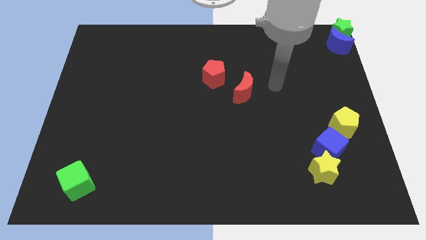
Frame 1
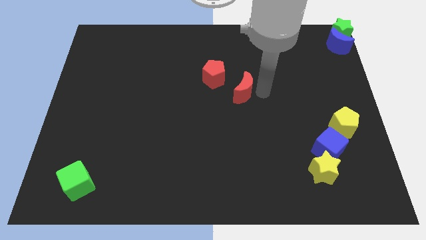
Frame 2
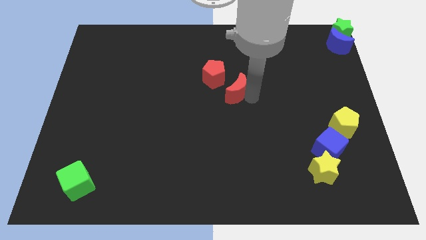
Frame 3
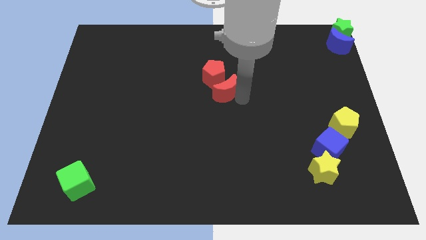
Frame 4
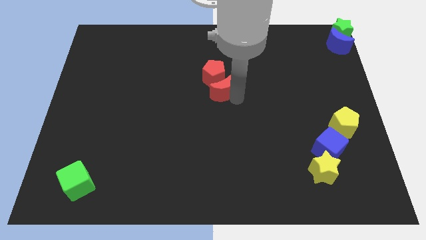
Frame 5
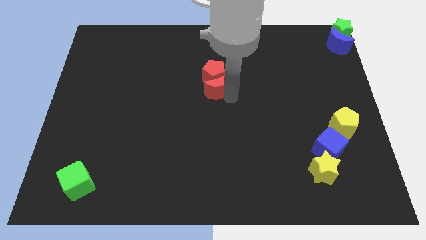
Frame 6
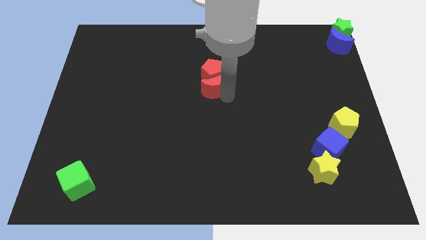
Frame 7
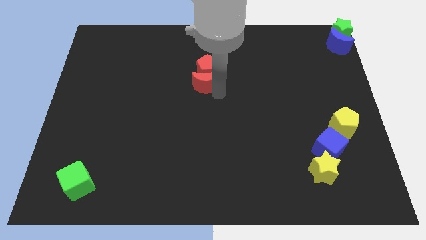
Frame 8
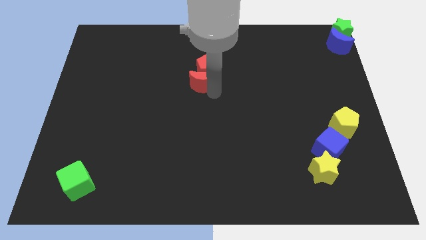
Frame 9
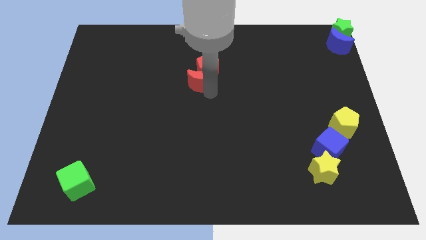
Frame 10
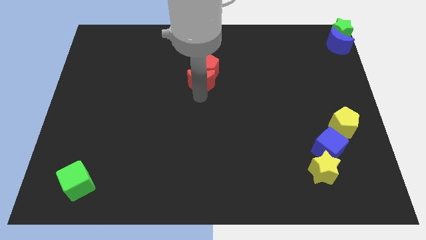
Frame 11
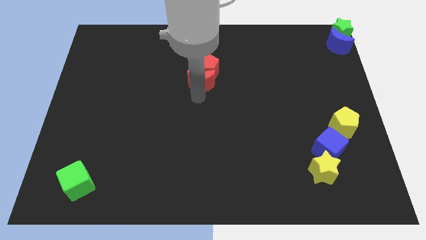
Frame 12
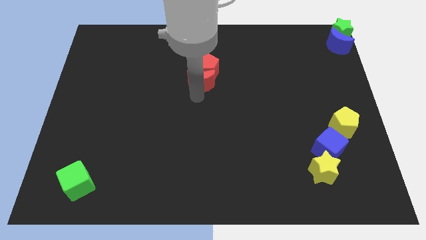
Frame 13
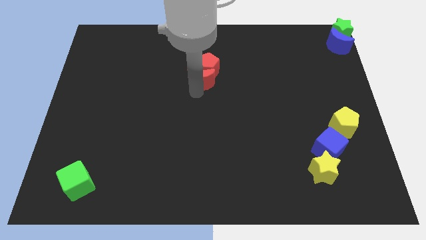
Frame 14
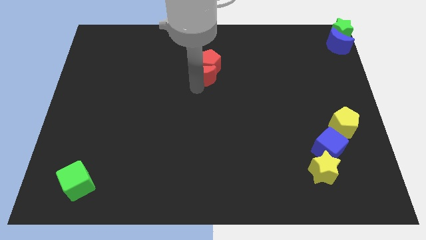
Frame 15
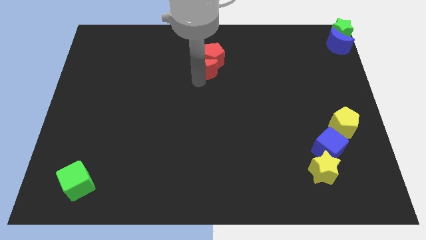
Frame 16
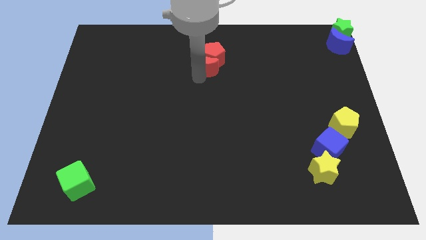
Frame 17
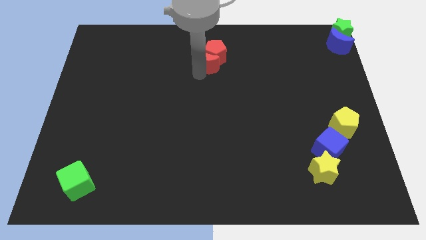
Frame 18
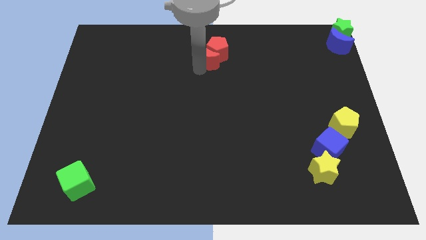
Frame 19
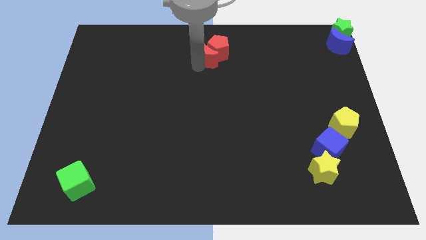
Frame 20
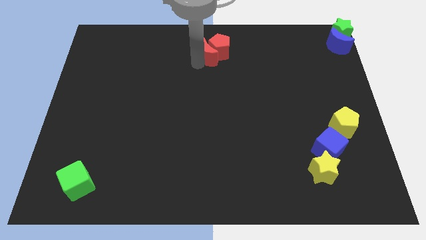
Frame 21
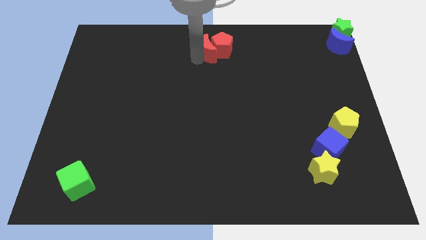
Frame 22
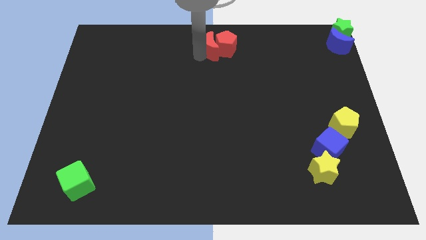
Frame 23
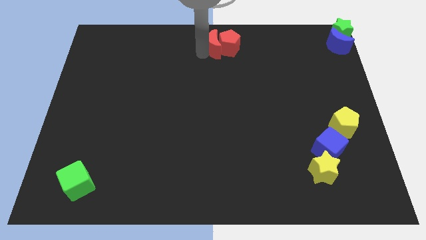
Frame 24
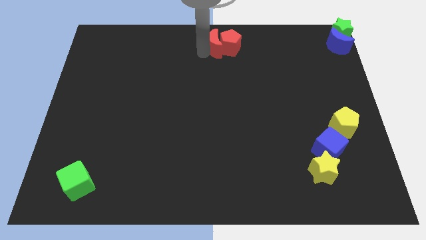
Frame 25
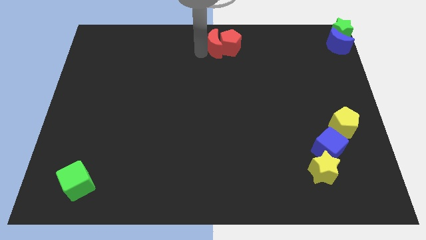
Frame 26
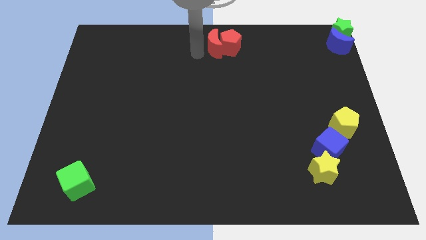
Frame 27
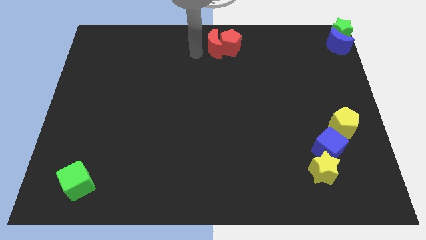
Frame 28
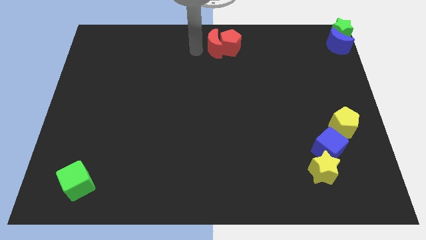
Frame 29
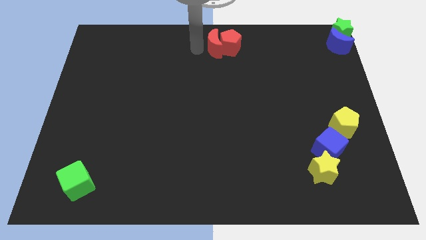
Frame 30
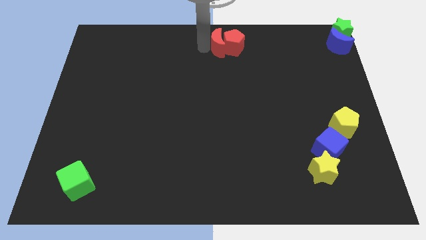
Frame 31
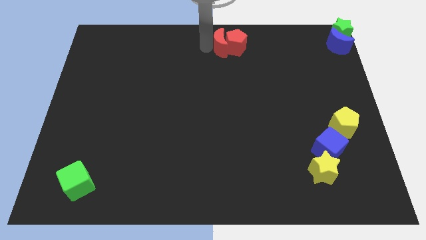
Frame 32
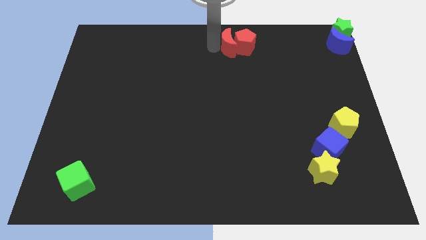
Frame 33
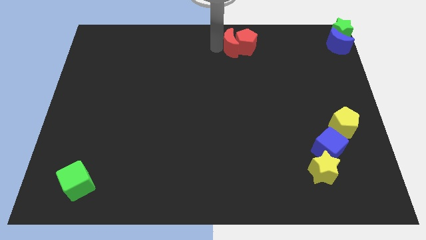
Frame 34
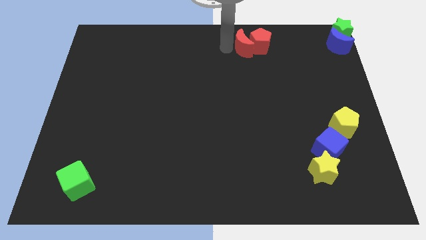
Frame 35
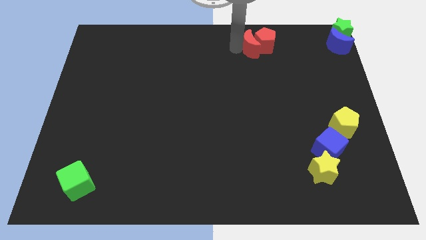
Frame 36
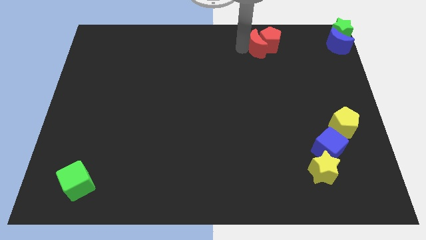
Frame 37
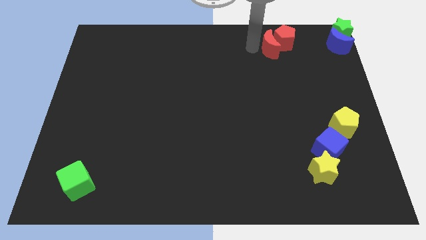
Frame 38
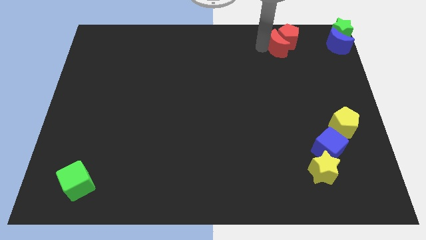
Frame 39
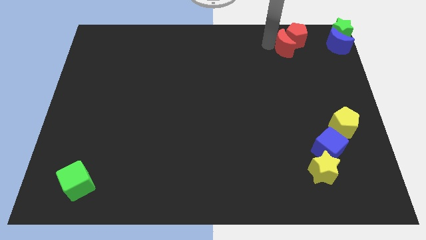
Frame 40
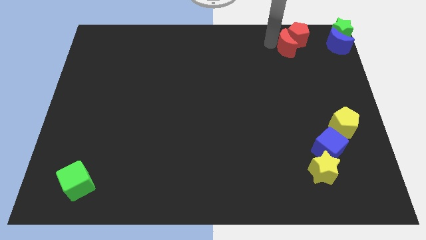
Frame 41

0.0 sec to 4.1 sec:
move red moon along with red pentagon towards top right

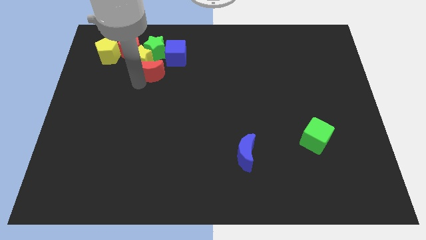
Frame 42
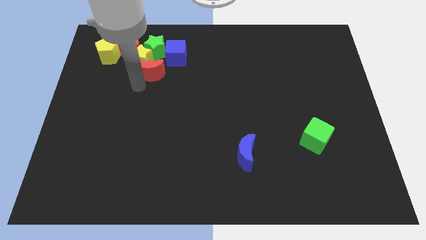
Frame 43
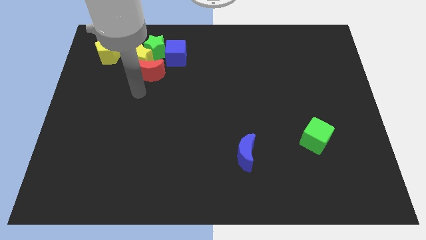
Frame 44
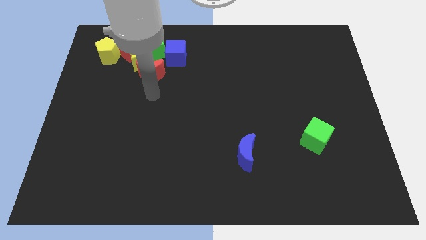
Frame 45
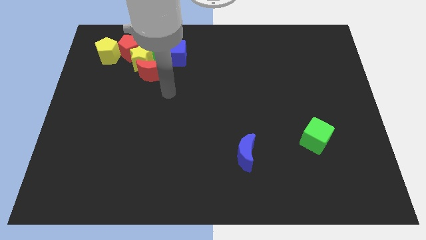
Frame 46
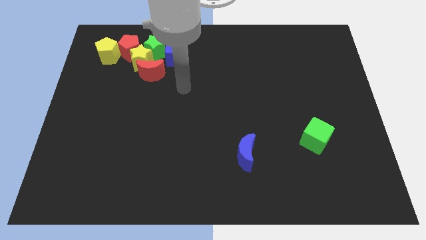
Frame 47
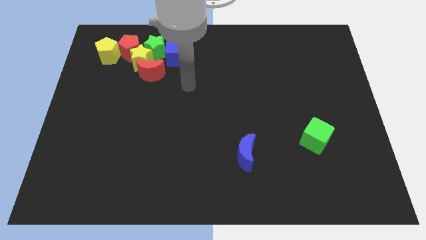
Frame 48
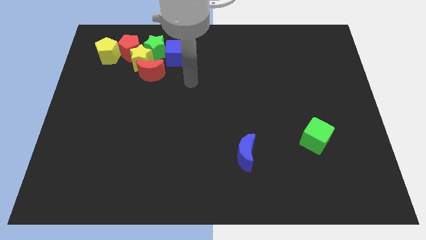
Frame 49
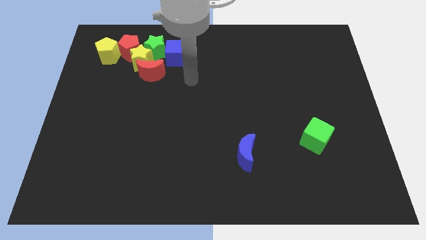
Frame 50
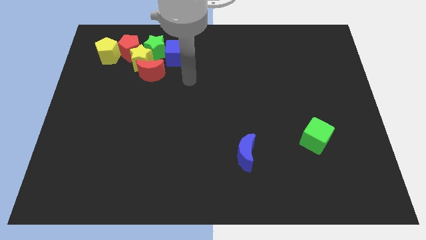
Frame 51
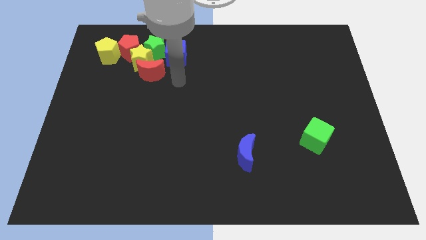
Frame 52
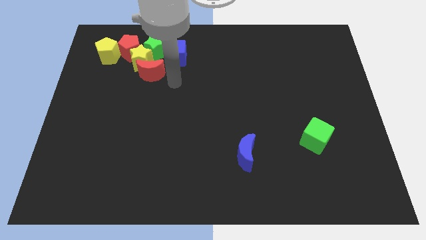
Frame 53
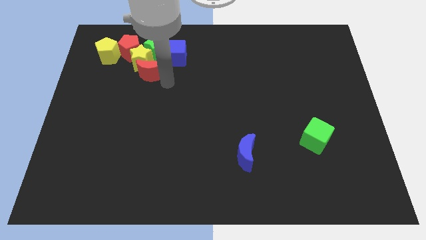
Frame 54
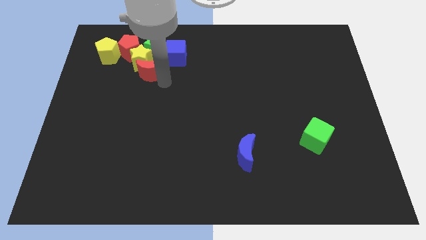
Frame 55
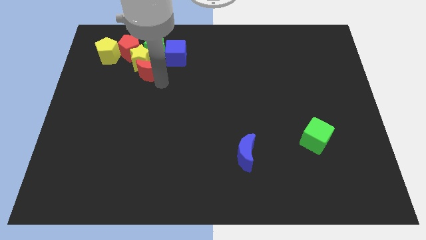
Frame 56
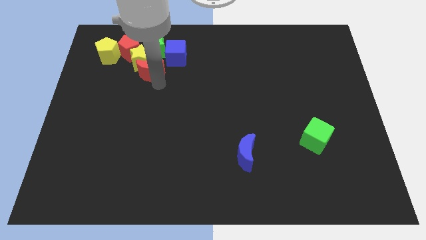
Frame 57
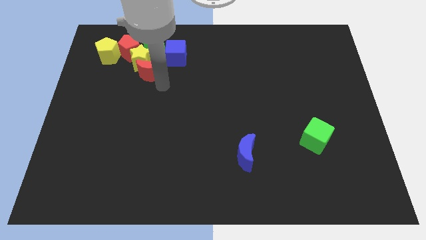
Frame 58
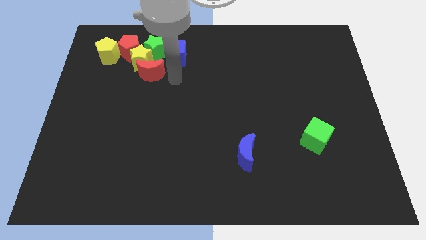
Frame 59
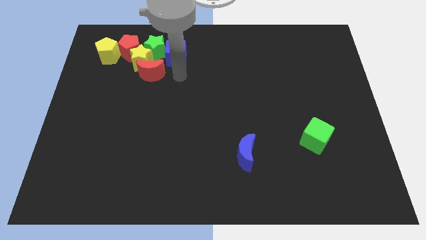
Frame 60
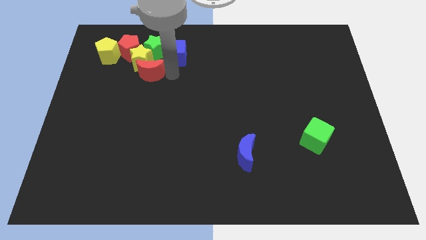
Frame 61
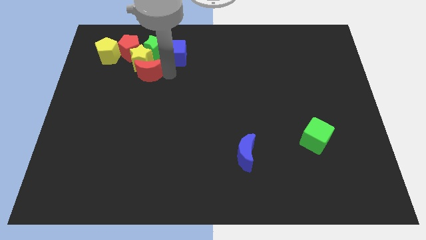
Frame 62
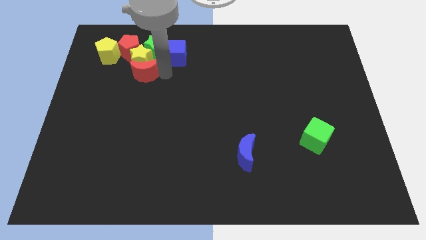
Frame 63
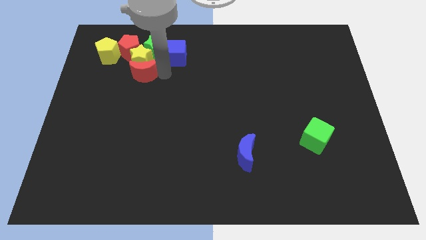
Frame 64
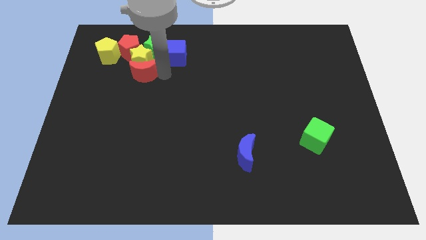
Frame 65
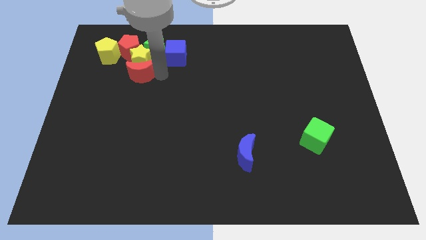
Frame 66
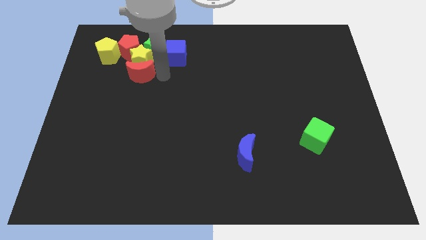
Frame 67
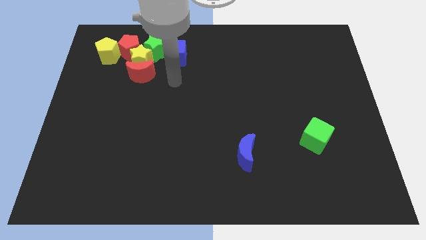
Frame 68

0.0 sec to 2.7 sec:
move the red crescent below the yellow star

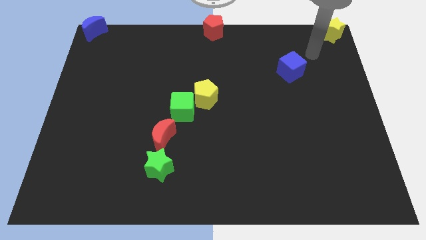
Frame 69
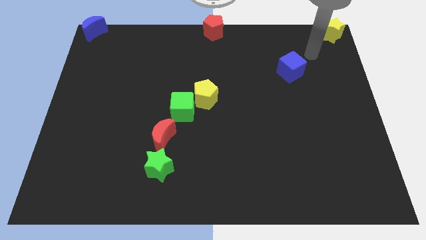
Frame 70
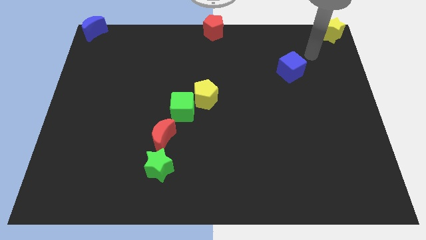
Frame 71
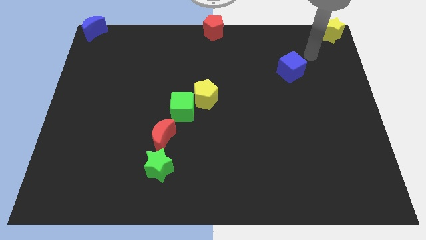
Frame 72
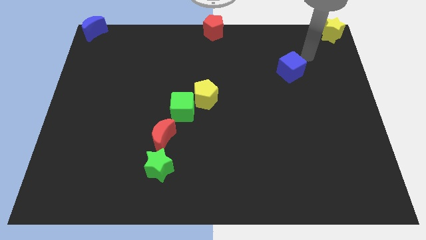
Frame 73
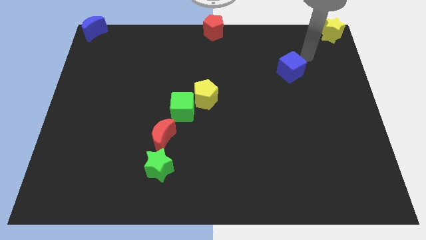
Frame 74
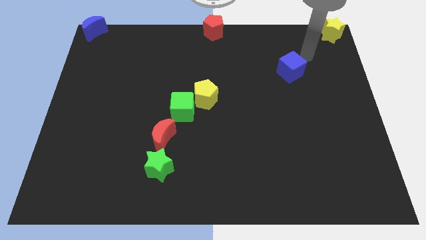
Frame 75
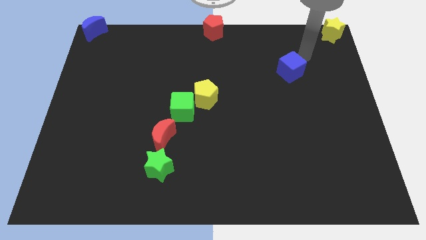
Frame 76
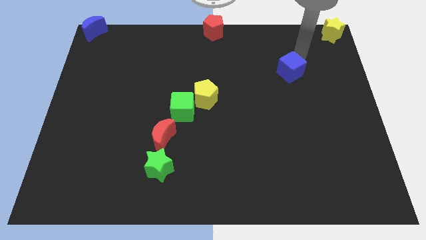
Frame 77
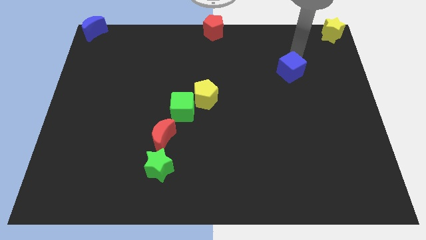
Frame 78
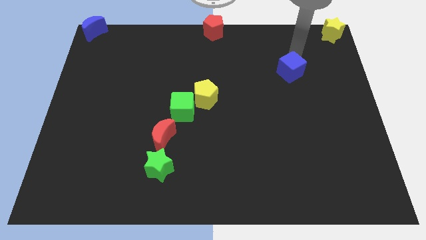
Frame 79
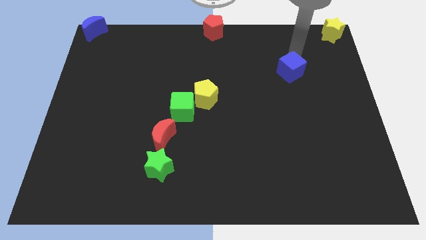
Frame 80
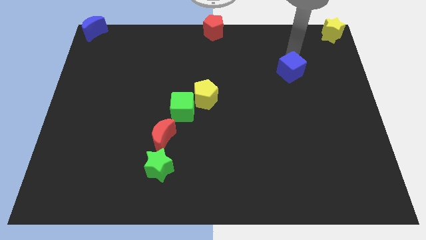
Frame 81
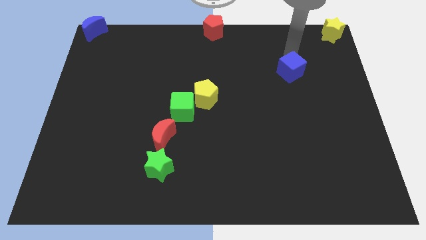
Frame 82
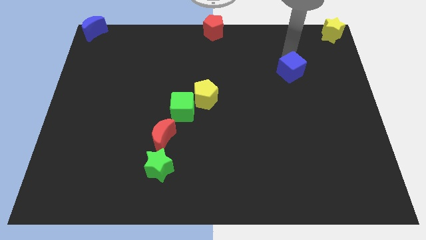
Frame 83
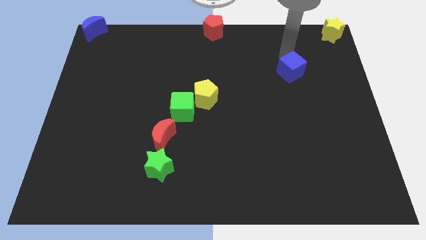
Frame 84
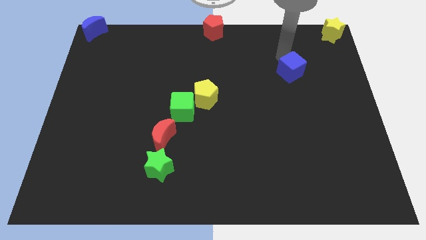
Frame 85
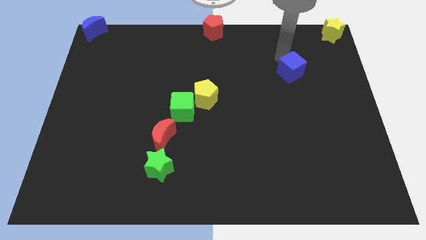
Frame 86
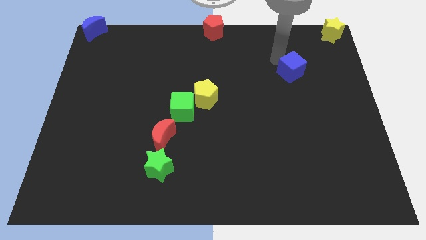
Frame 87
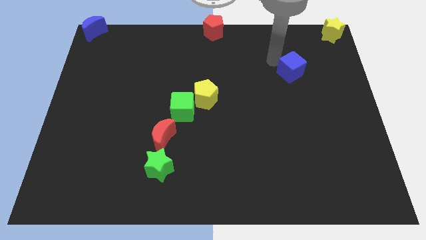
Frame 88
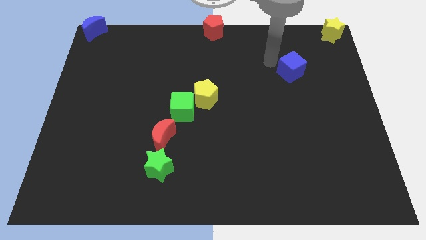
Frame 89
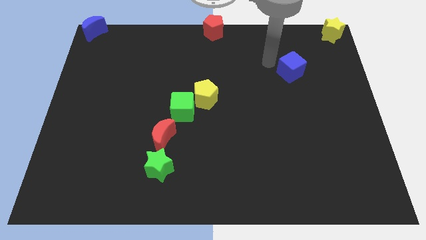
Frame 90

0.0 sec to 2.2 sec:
point your arm at the left of the blue cube
